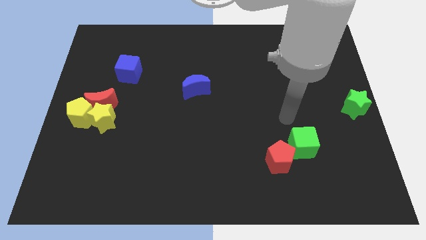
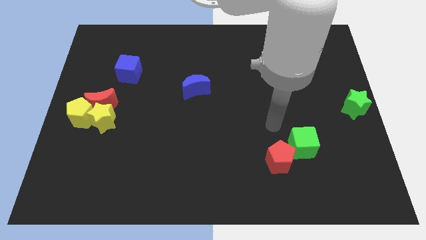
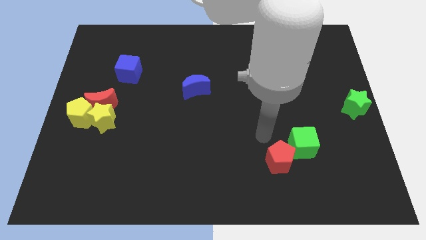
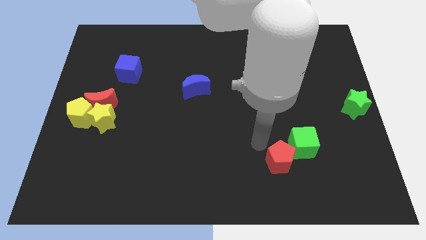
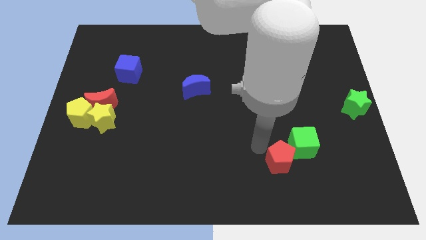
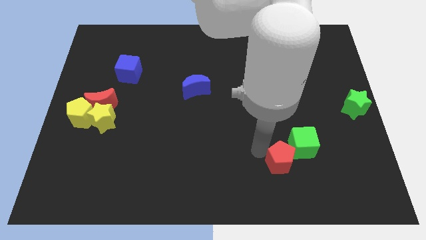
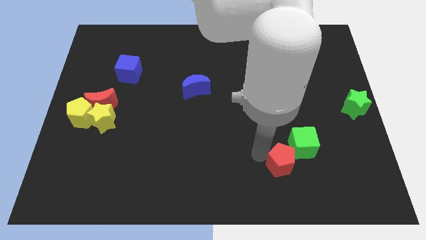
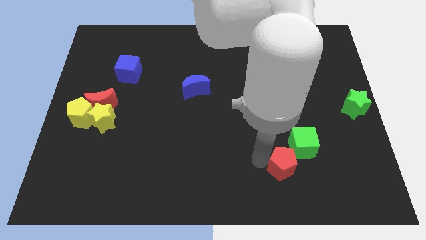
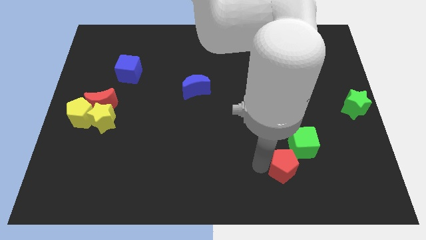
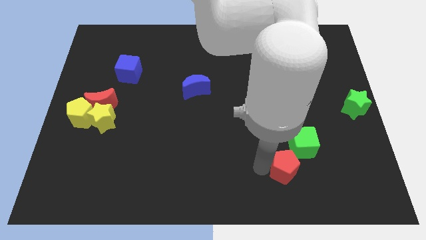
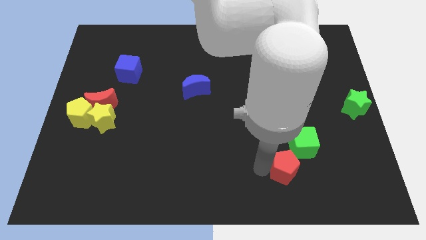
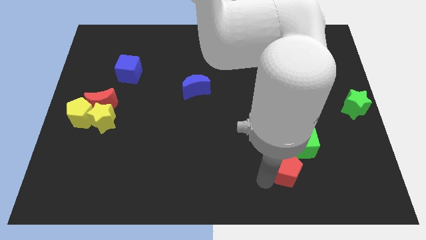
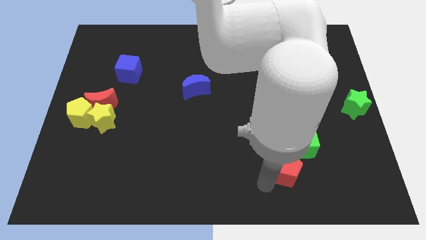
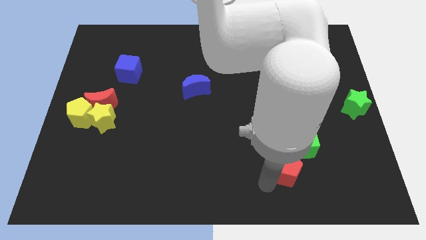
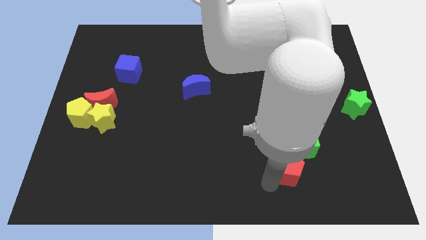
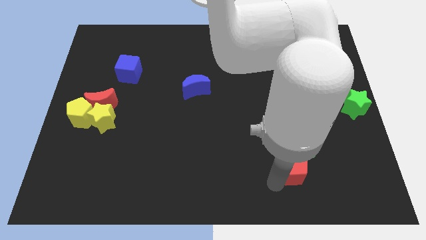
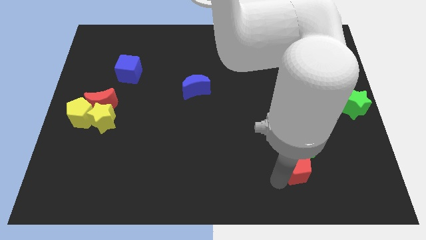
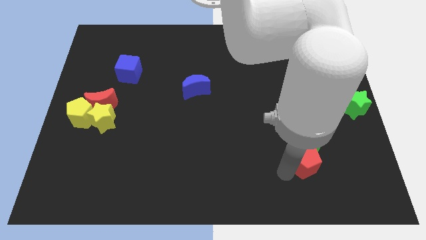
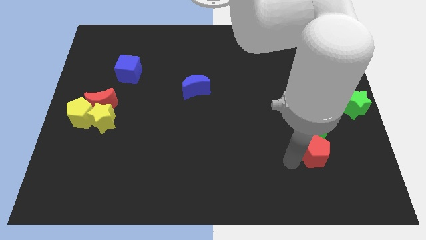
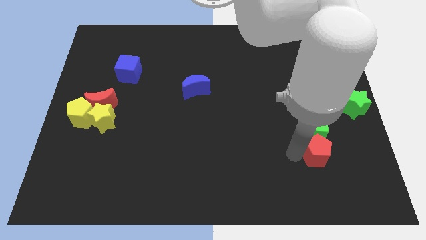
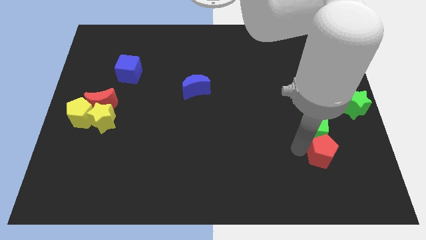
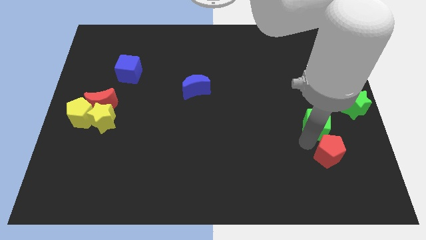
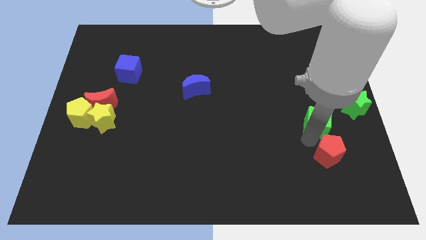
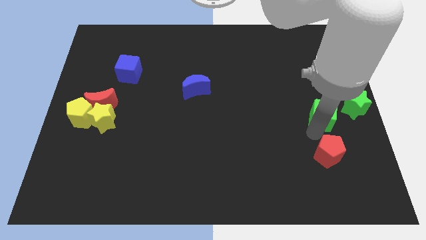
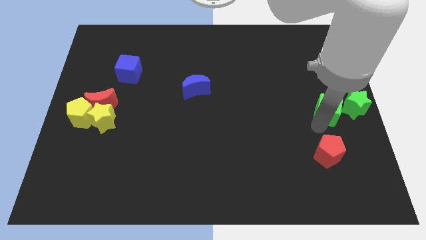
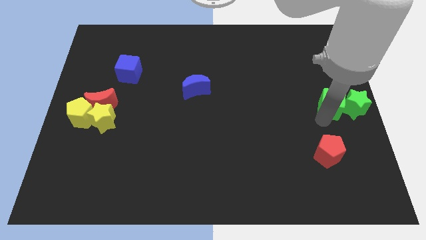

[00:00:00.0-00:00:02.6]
push green cube beside green star

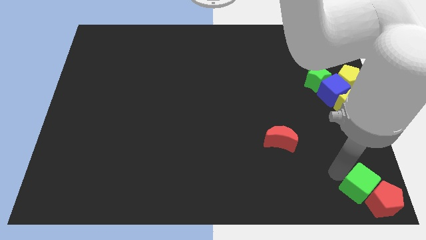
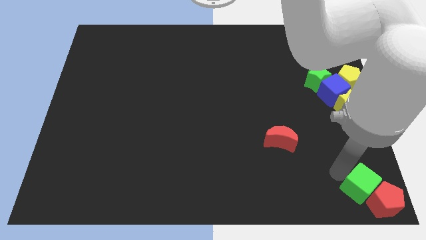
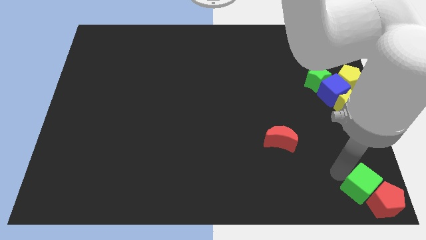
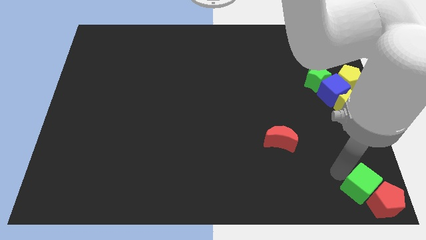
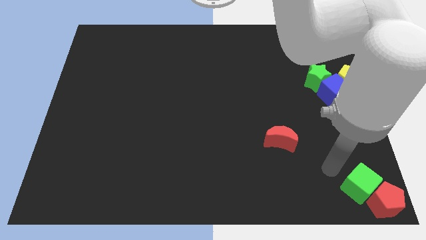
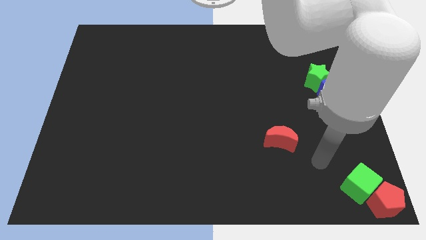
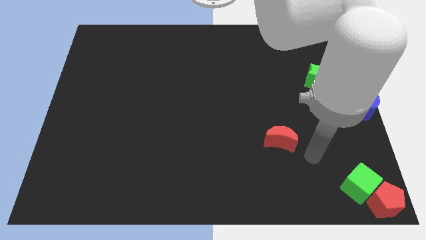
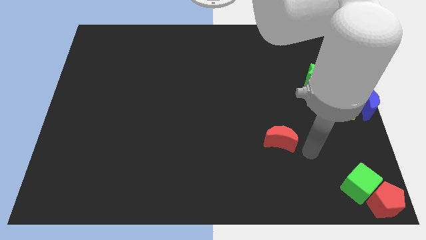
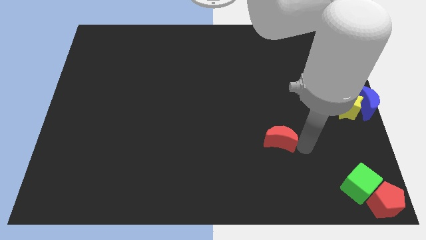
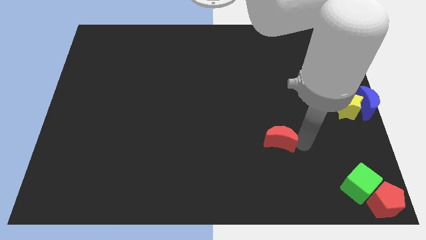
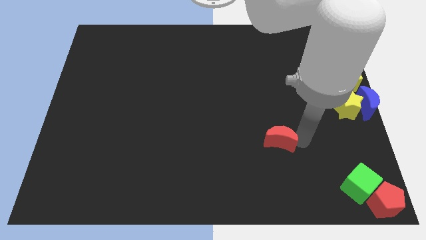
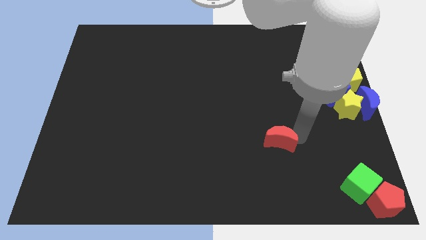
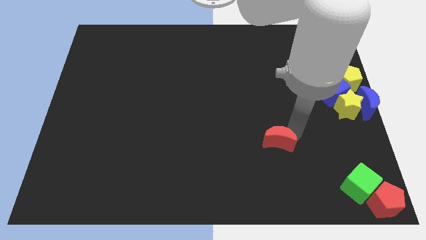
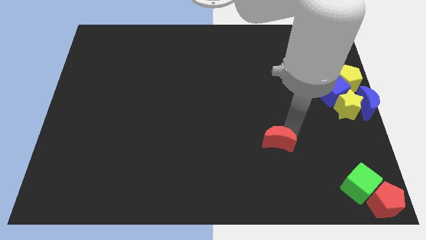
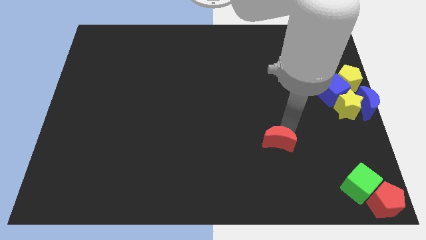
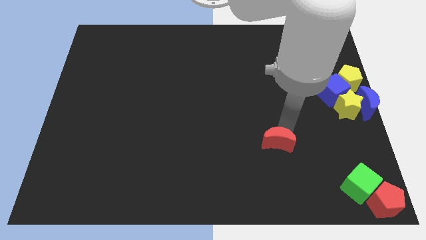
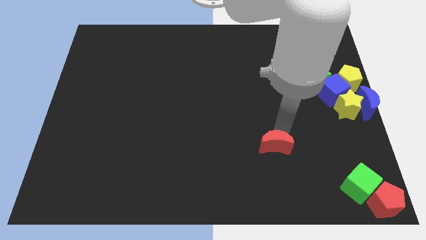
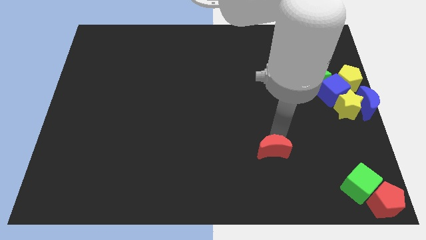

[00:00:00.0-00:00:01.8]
slide the red moon towards the bottom side of the board

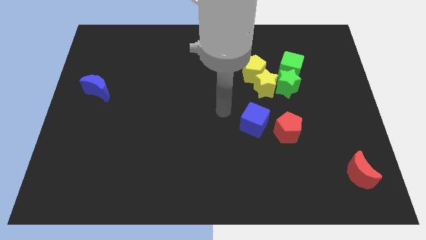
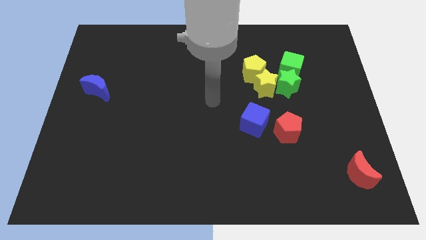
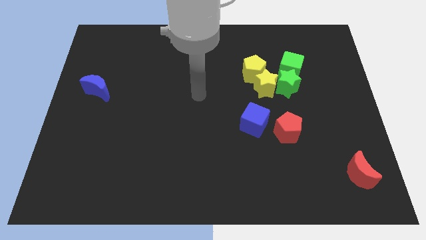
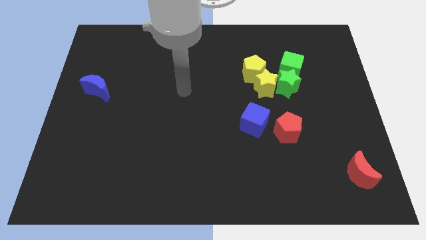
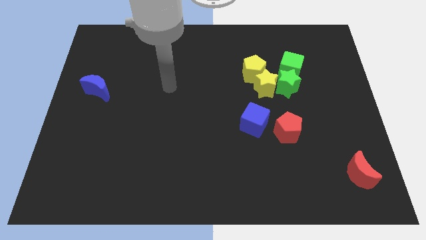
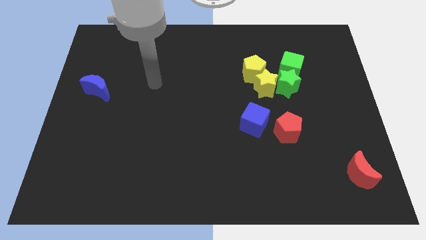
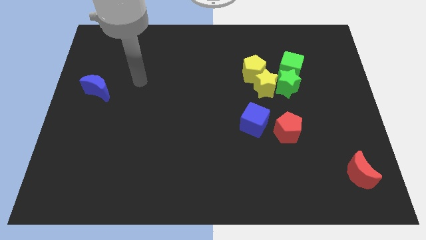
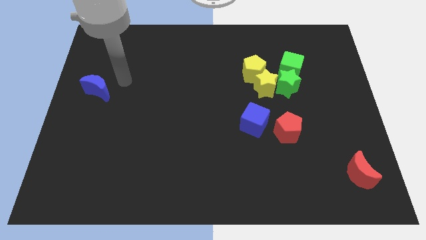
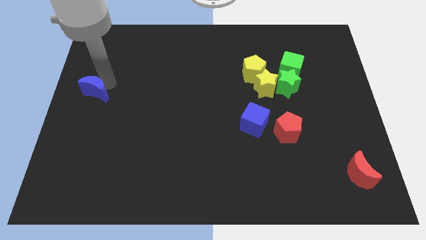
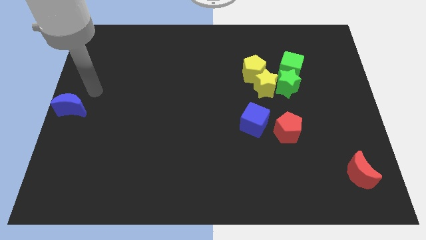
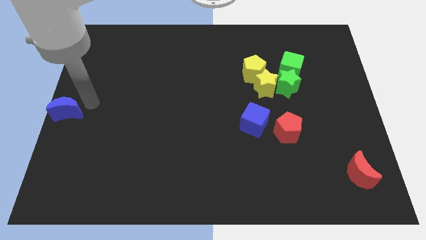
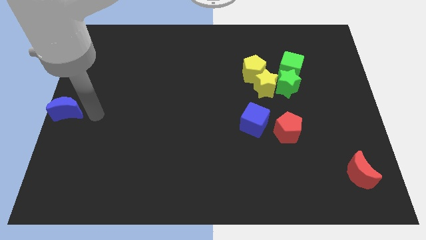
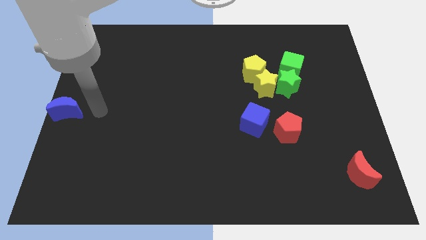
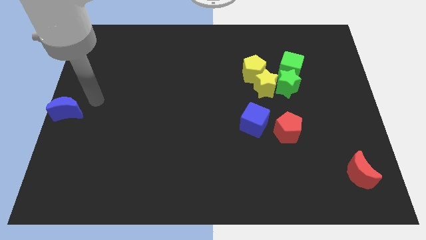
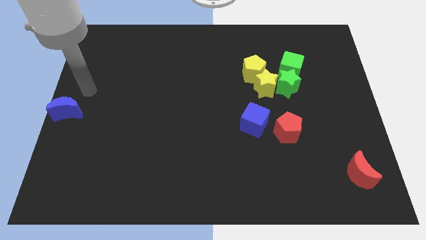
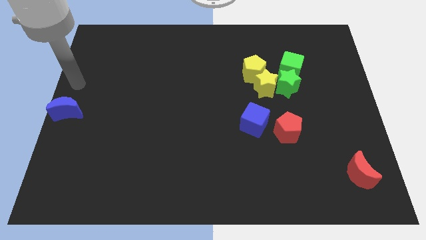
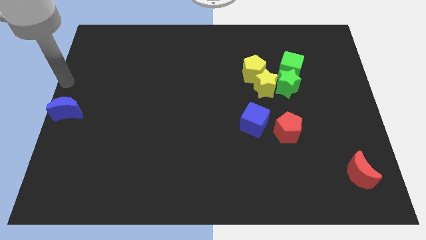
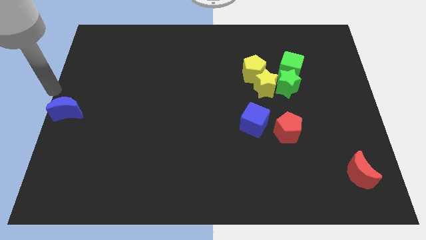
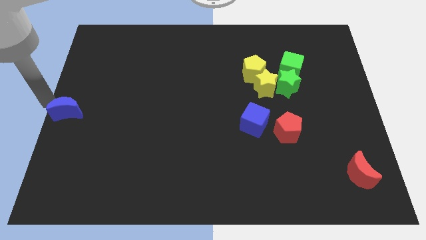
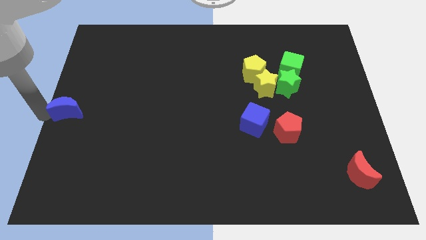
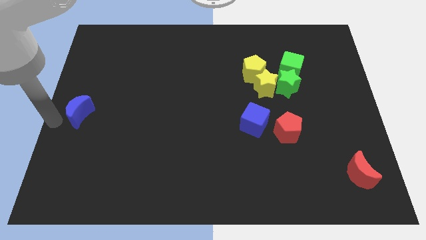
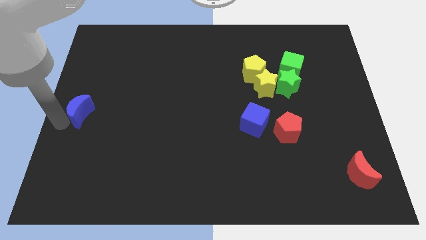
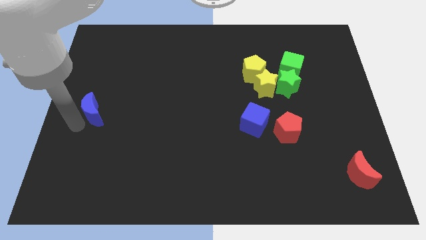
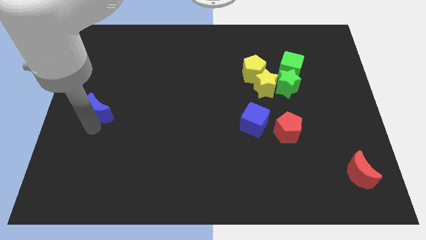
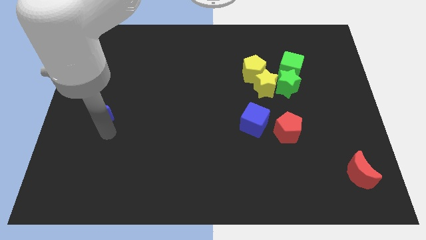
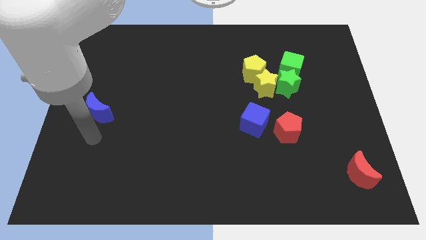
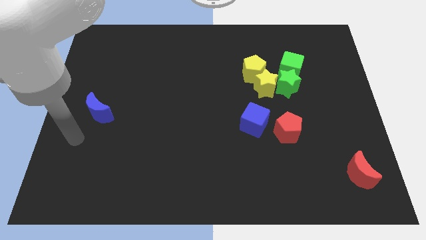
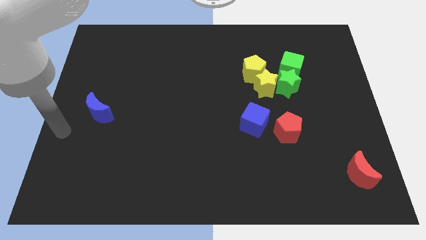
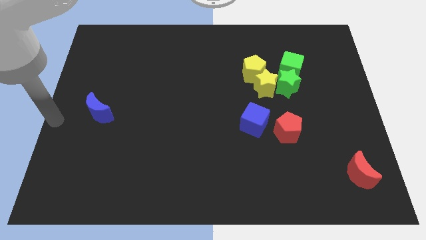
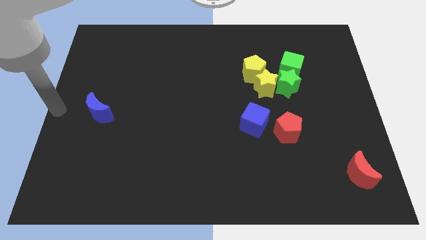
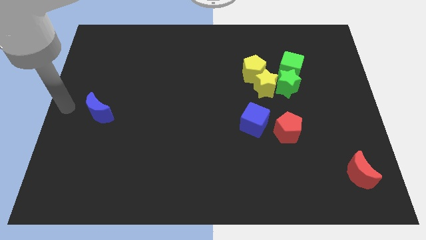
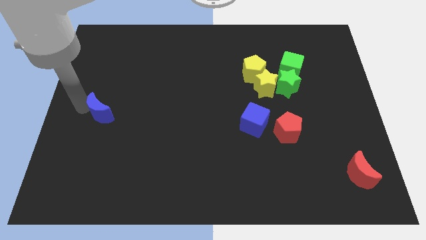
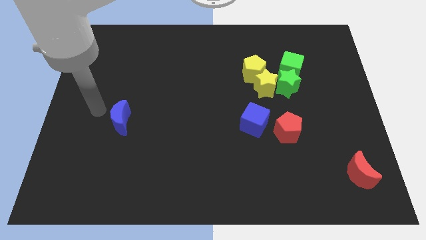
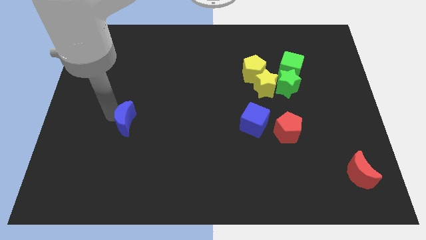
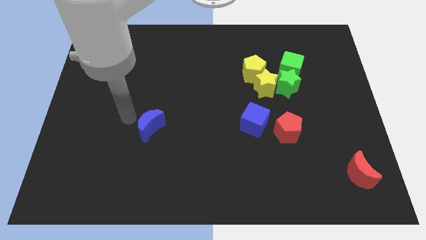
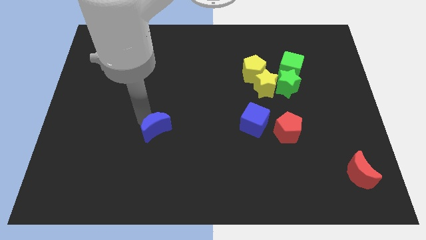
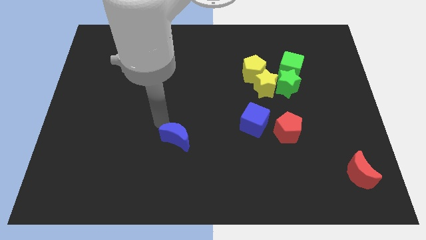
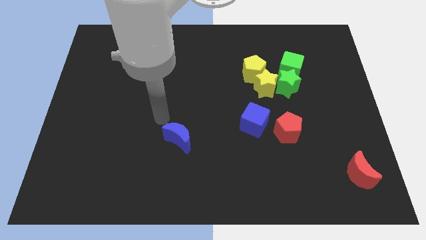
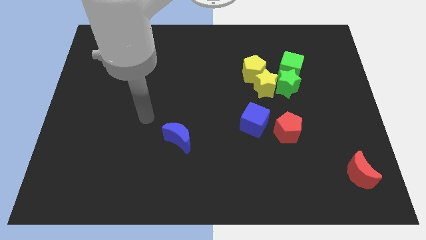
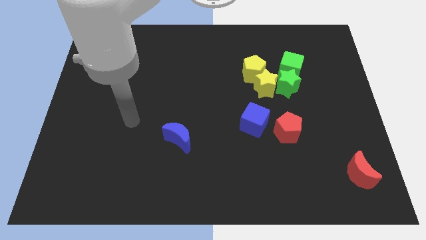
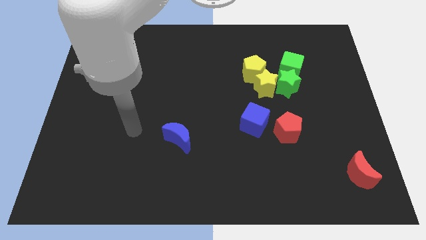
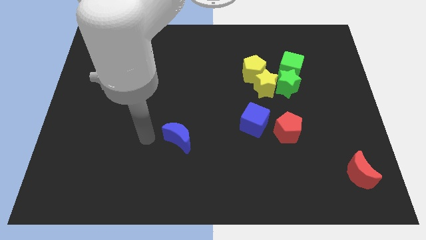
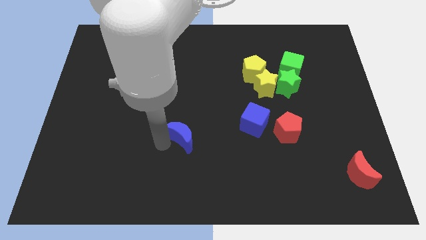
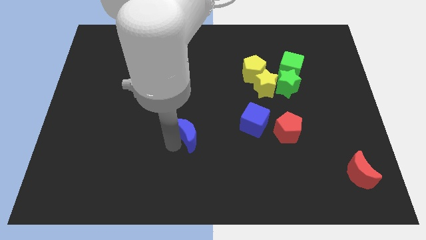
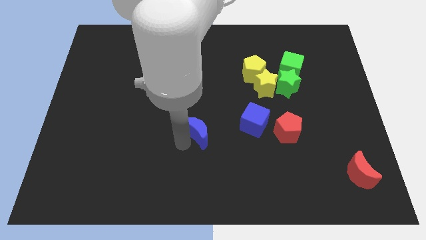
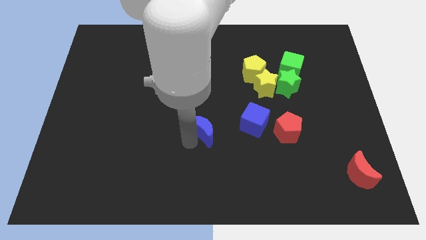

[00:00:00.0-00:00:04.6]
move the blue crescent towards the center of the board
